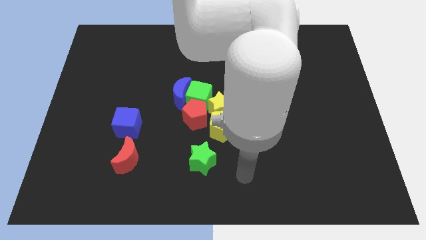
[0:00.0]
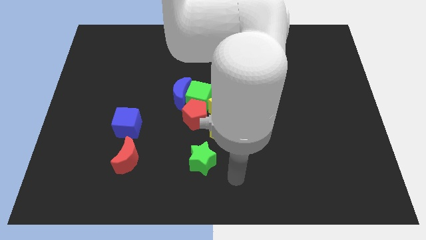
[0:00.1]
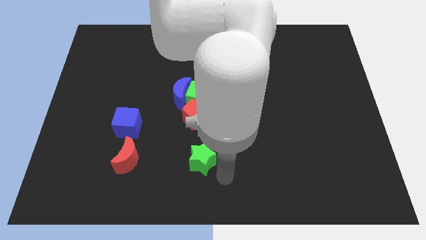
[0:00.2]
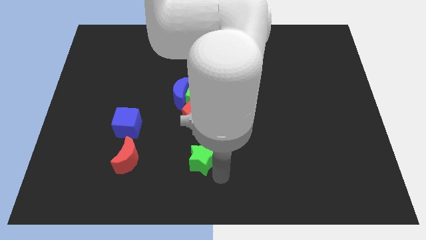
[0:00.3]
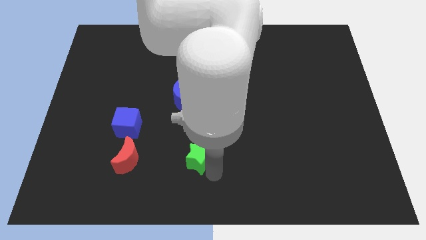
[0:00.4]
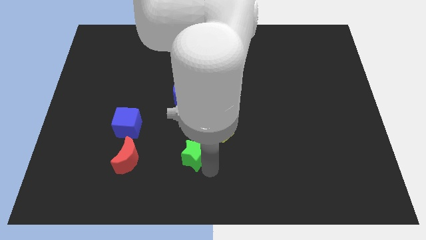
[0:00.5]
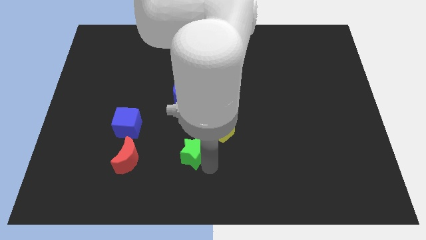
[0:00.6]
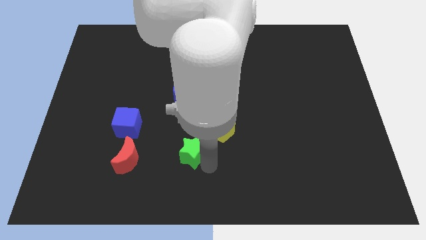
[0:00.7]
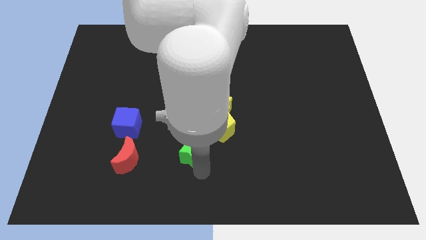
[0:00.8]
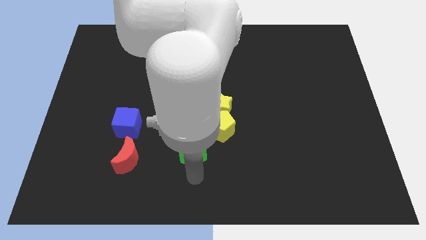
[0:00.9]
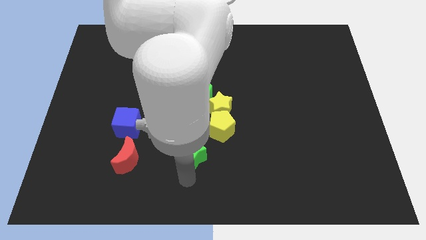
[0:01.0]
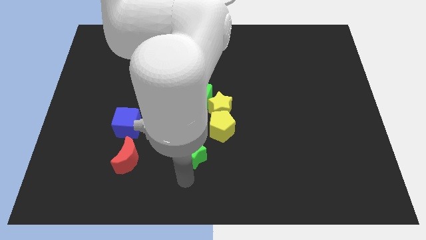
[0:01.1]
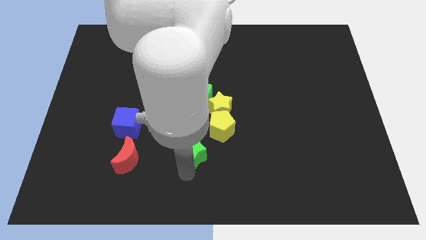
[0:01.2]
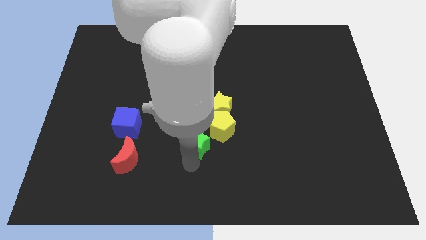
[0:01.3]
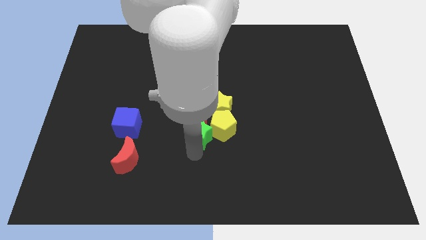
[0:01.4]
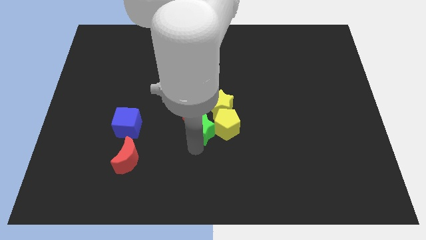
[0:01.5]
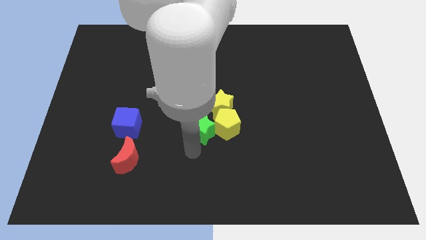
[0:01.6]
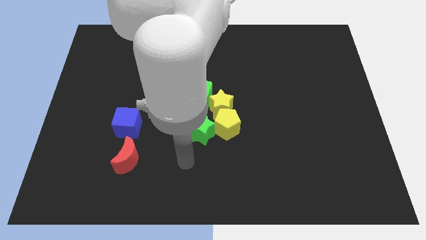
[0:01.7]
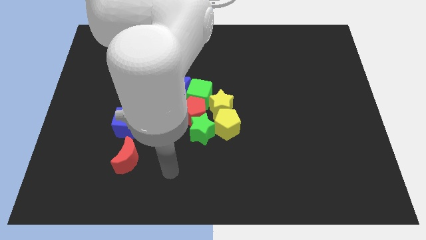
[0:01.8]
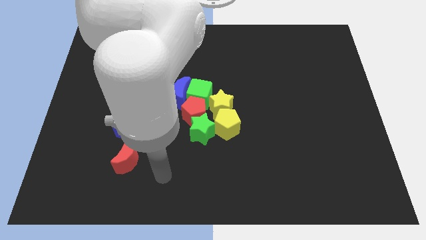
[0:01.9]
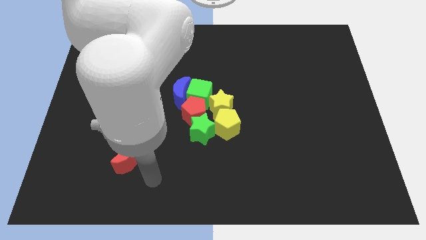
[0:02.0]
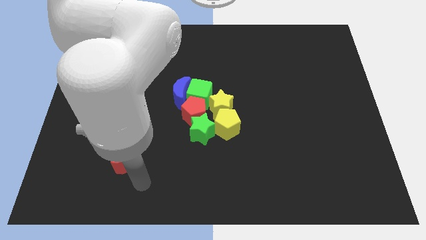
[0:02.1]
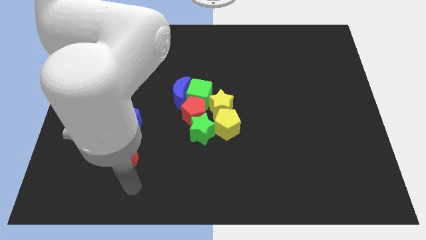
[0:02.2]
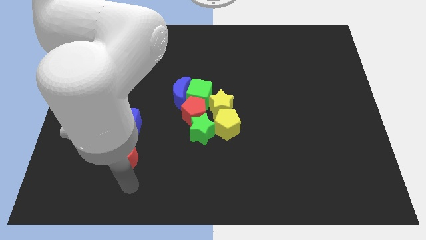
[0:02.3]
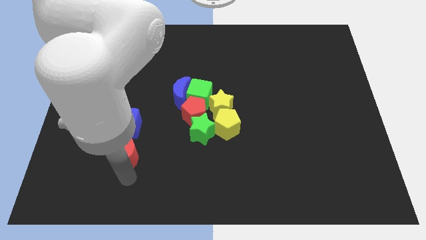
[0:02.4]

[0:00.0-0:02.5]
put the green star at the bottom of the red pentagon

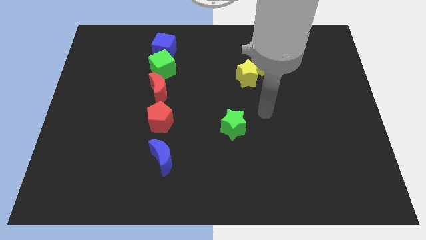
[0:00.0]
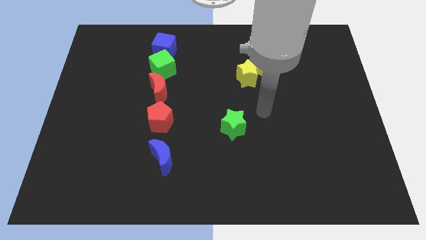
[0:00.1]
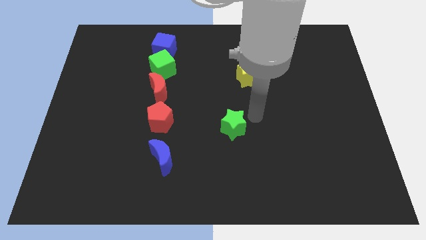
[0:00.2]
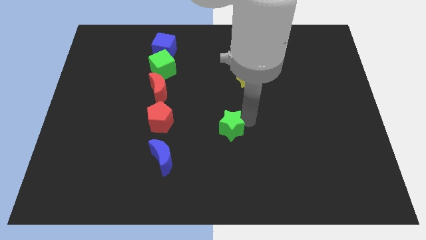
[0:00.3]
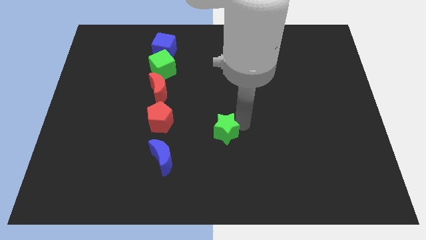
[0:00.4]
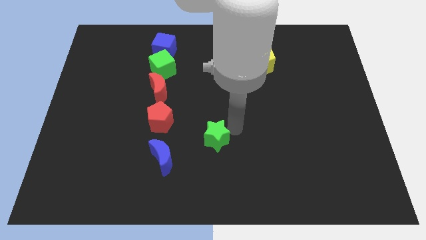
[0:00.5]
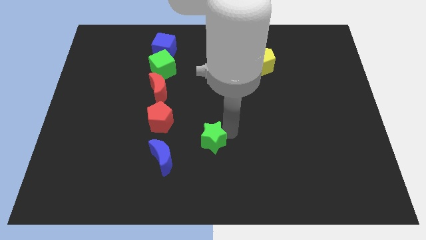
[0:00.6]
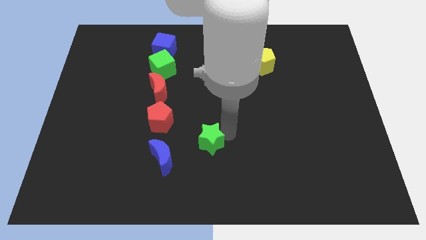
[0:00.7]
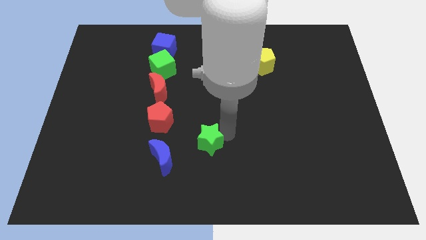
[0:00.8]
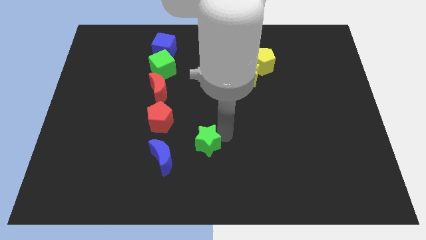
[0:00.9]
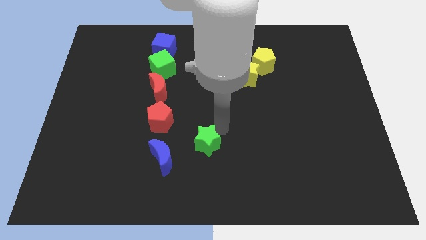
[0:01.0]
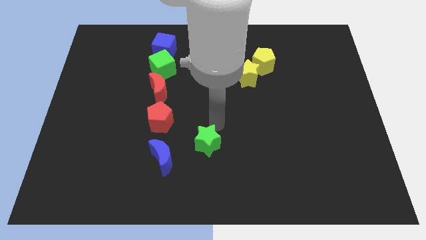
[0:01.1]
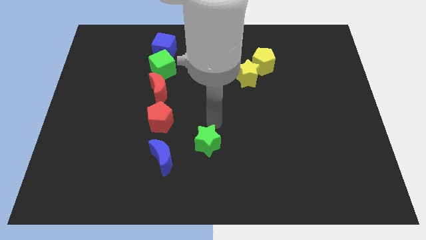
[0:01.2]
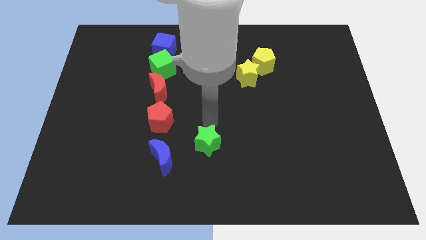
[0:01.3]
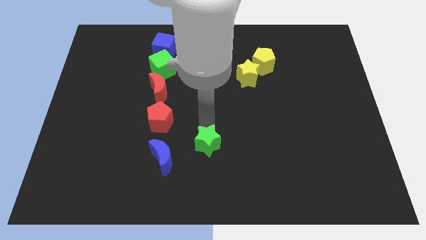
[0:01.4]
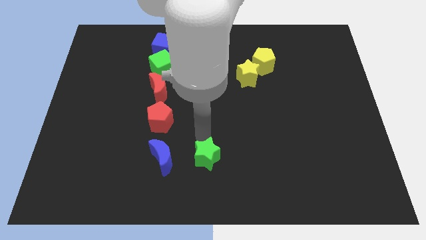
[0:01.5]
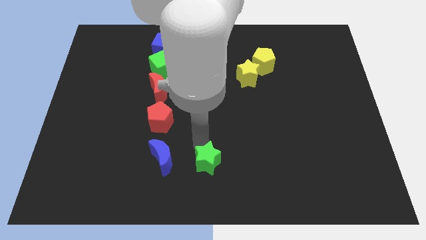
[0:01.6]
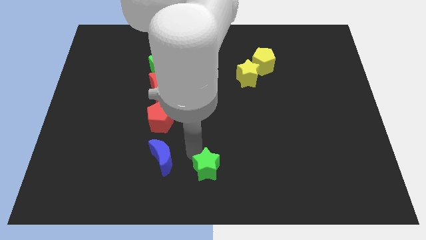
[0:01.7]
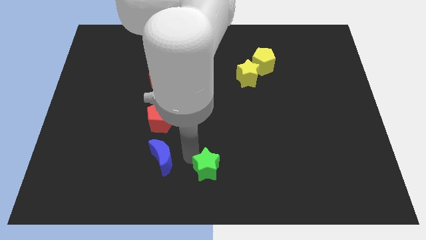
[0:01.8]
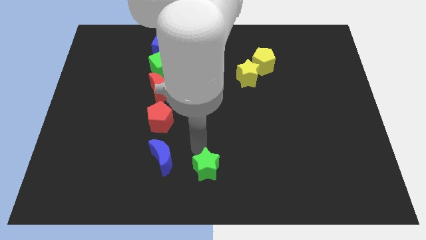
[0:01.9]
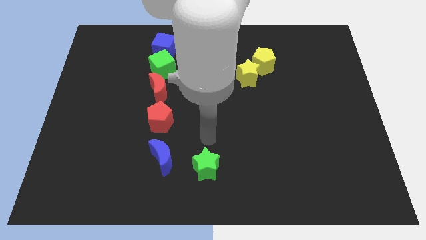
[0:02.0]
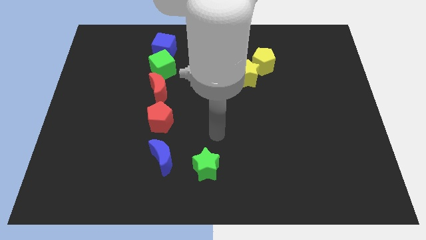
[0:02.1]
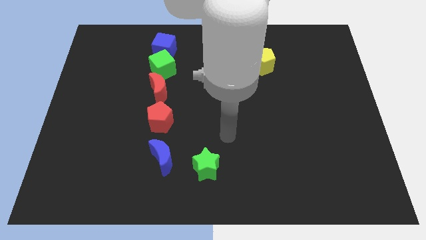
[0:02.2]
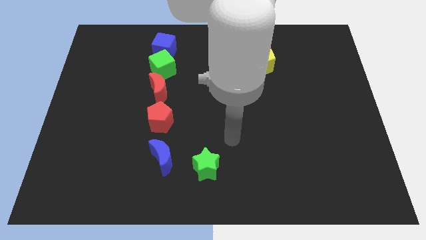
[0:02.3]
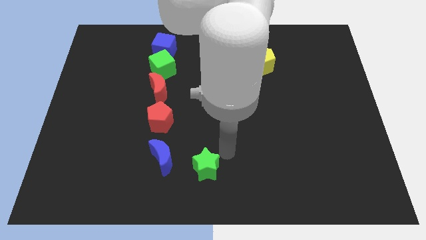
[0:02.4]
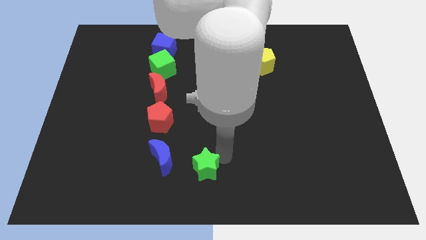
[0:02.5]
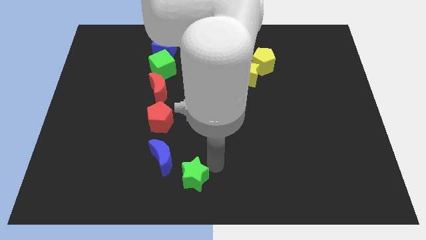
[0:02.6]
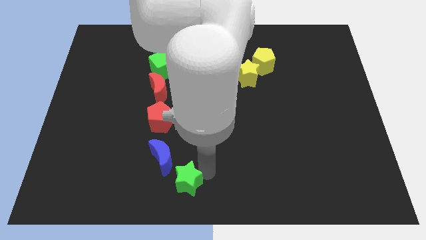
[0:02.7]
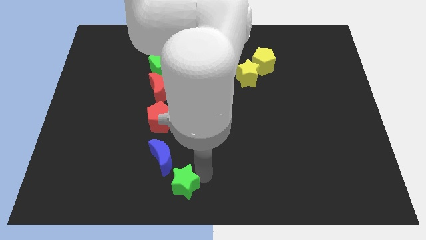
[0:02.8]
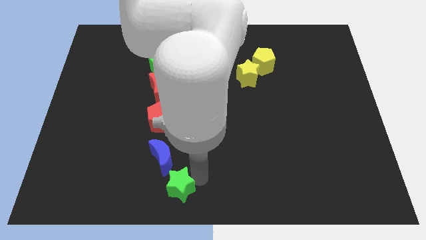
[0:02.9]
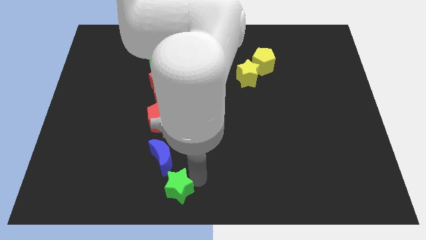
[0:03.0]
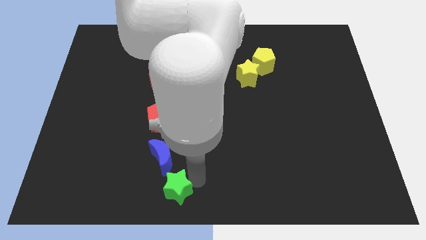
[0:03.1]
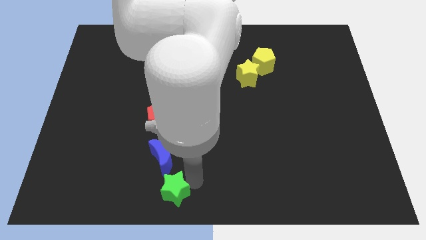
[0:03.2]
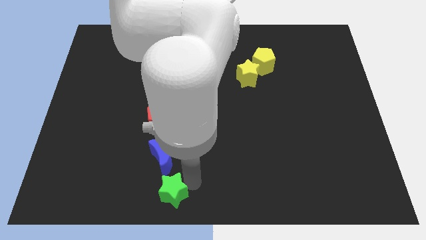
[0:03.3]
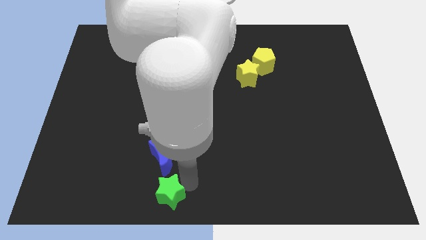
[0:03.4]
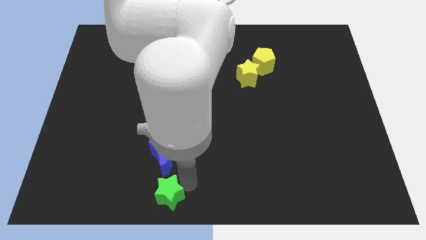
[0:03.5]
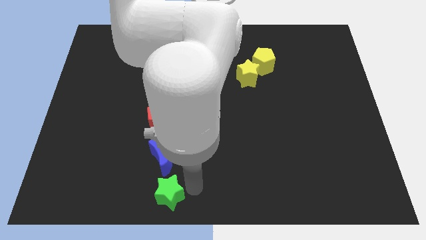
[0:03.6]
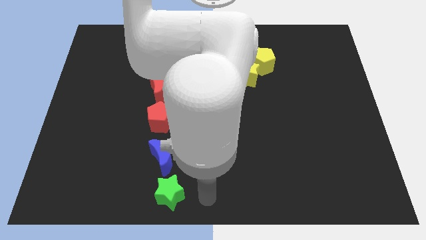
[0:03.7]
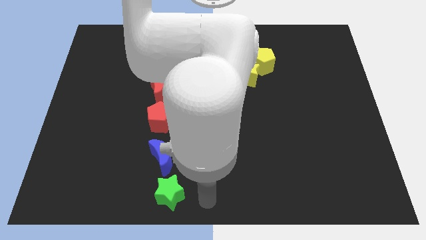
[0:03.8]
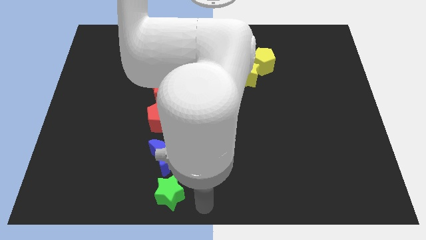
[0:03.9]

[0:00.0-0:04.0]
place the green star underneath the blue moon

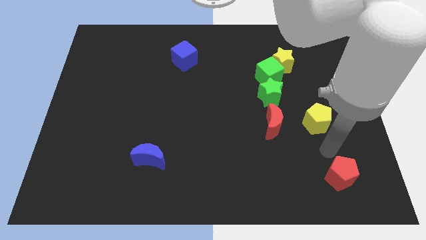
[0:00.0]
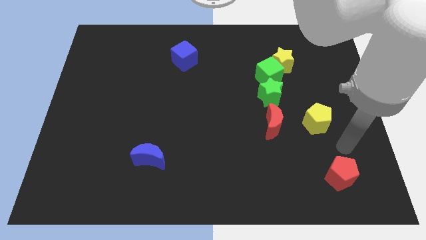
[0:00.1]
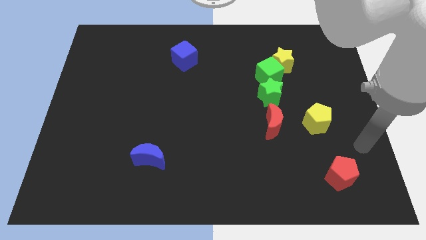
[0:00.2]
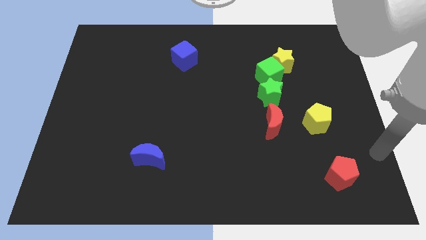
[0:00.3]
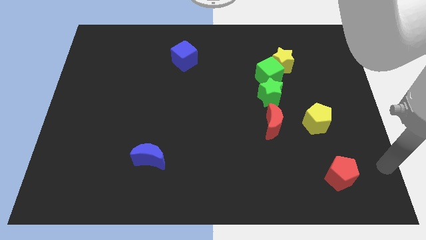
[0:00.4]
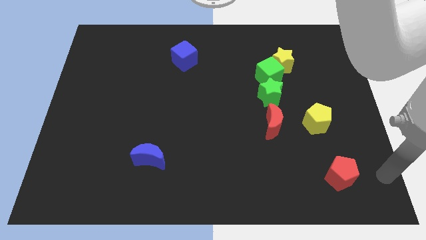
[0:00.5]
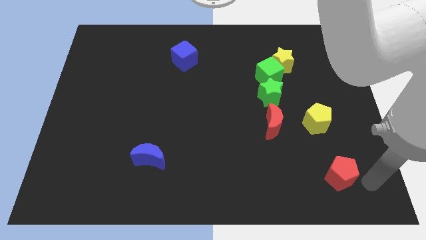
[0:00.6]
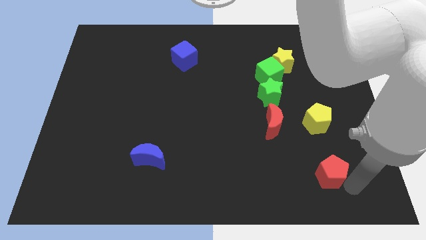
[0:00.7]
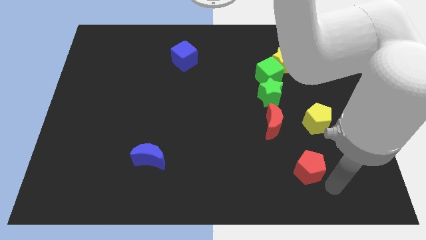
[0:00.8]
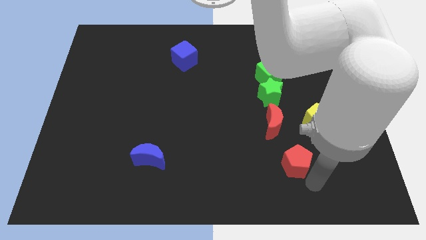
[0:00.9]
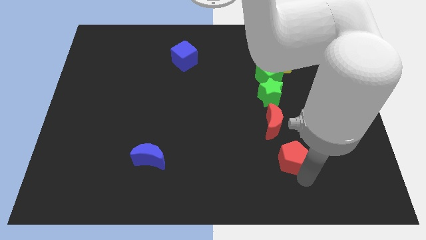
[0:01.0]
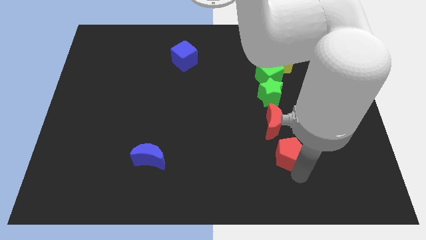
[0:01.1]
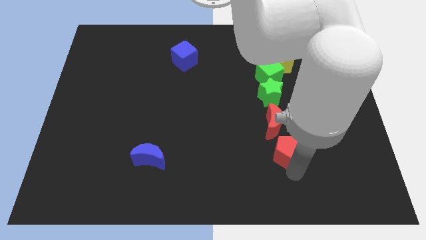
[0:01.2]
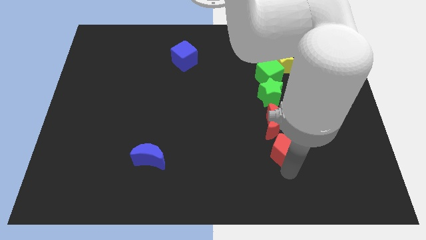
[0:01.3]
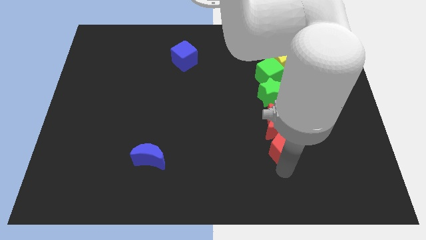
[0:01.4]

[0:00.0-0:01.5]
push the red pentagon towards red crescent

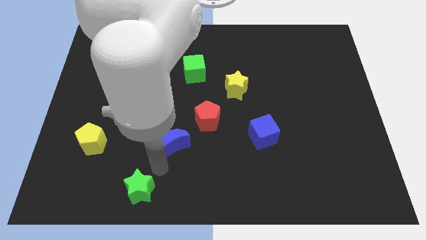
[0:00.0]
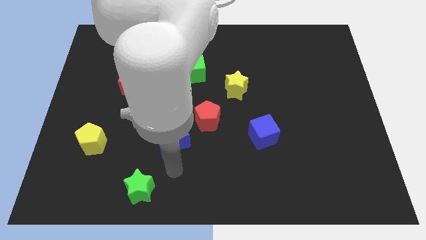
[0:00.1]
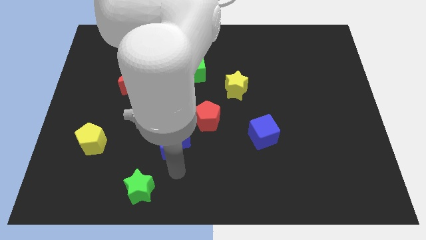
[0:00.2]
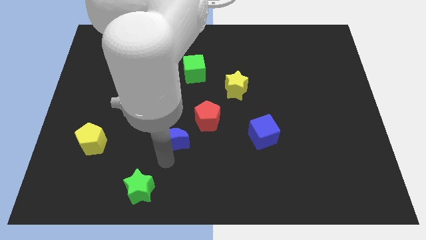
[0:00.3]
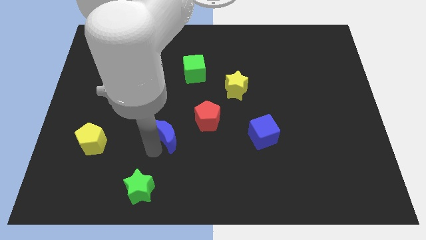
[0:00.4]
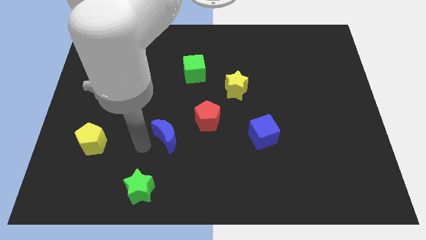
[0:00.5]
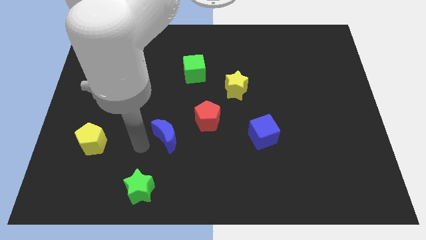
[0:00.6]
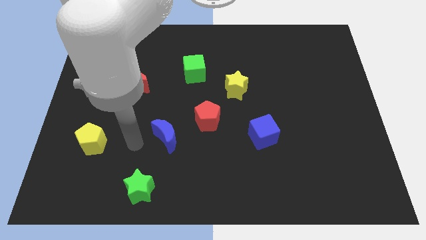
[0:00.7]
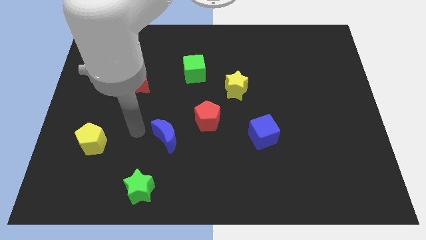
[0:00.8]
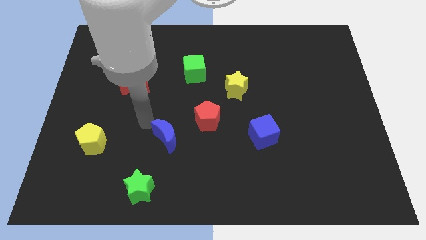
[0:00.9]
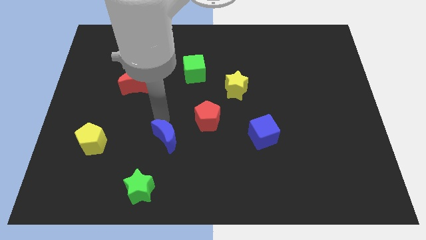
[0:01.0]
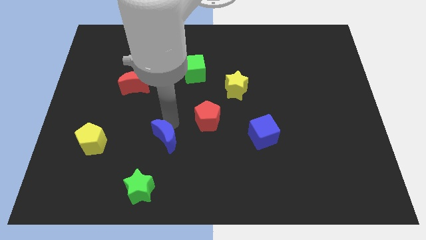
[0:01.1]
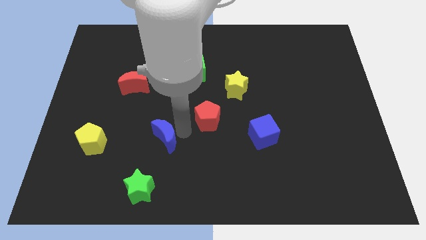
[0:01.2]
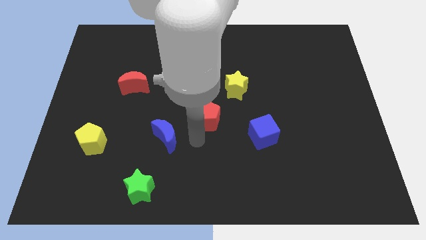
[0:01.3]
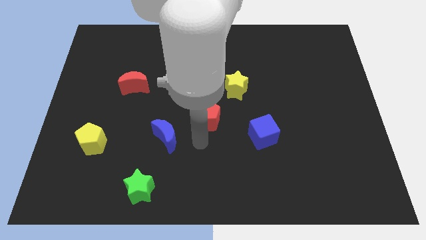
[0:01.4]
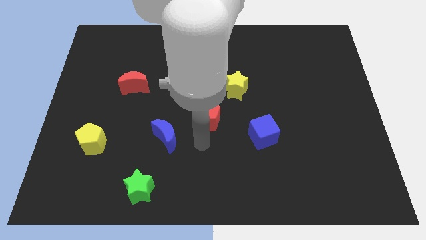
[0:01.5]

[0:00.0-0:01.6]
place the arm below the red pentagon
